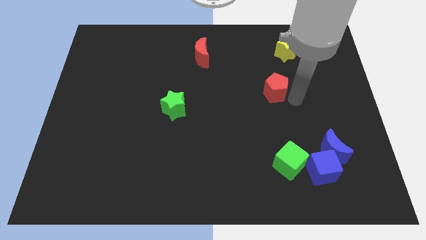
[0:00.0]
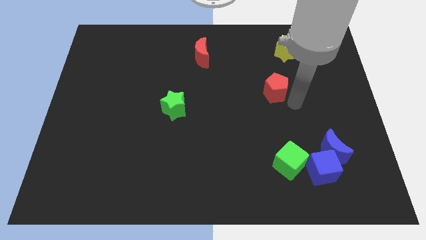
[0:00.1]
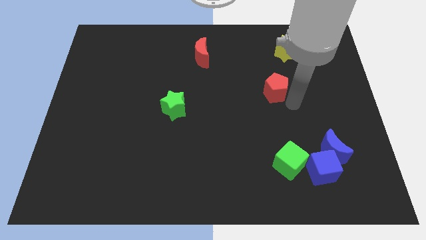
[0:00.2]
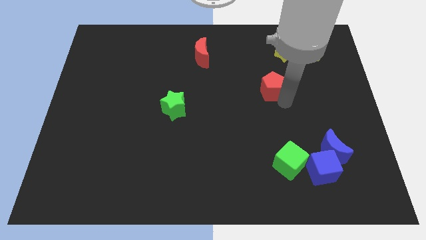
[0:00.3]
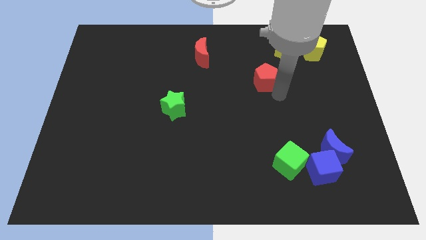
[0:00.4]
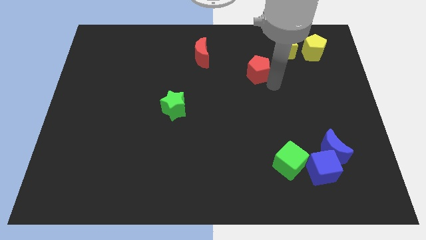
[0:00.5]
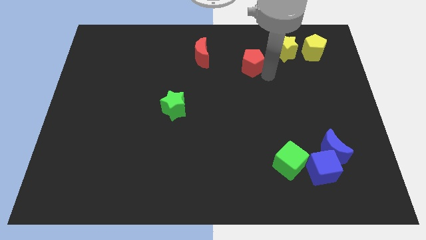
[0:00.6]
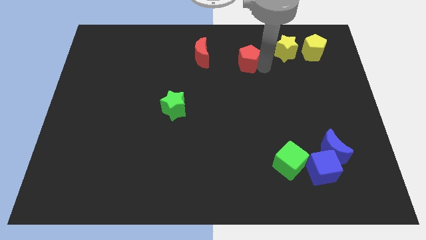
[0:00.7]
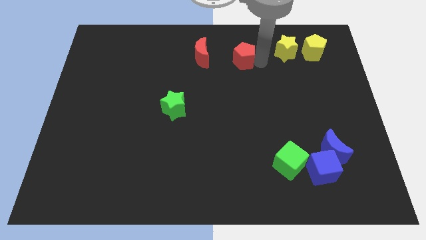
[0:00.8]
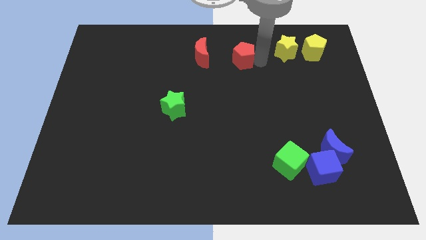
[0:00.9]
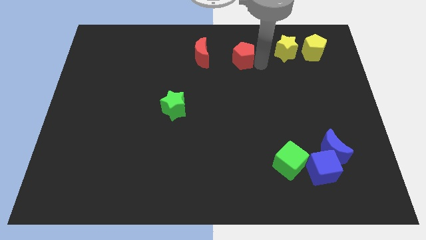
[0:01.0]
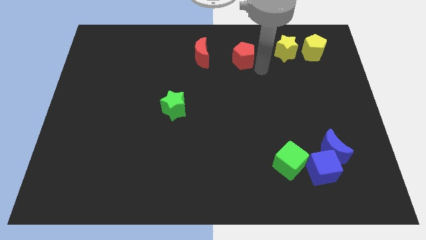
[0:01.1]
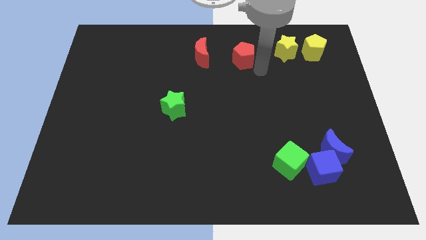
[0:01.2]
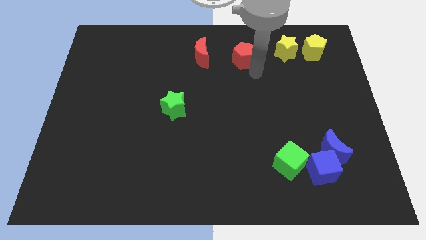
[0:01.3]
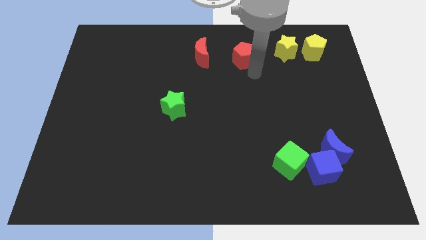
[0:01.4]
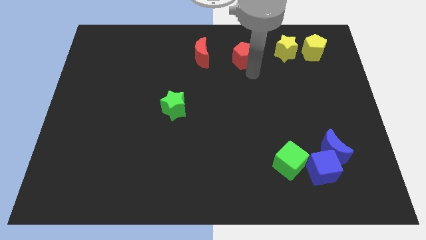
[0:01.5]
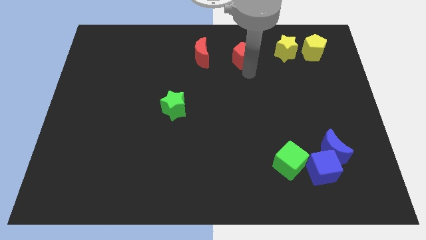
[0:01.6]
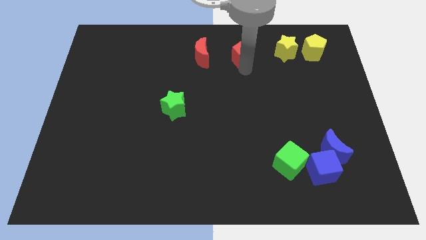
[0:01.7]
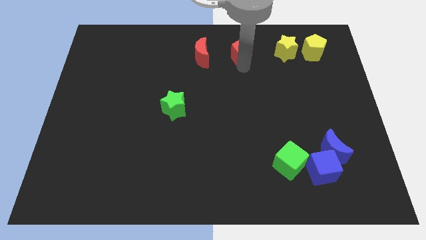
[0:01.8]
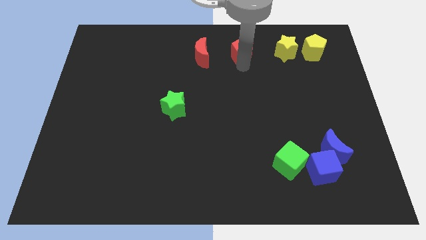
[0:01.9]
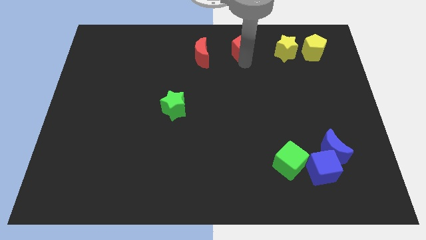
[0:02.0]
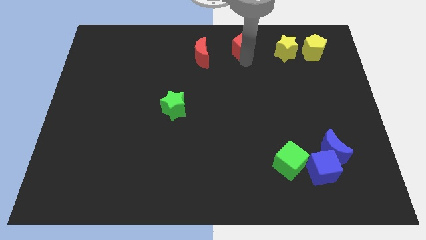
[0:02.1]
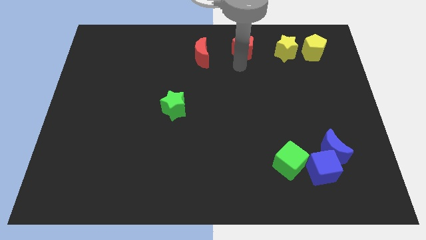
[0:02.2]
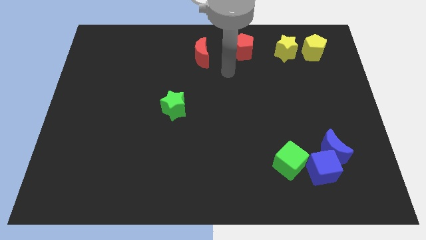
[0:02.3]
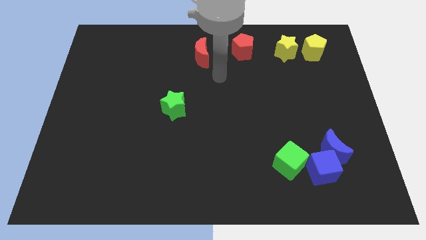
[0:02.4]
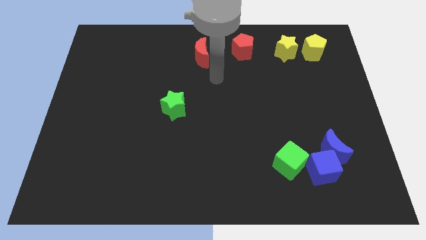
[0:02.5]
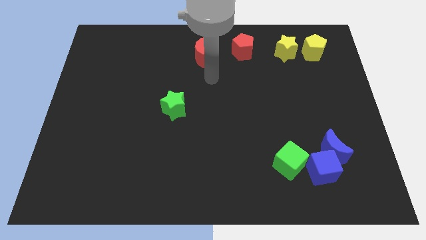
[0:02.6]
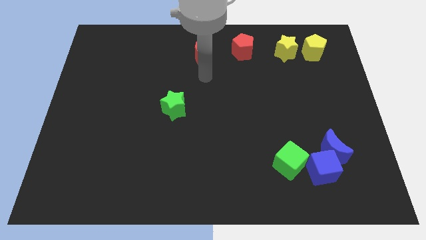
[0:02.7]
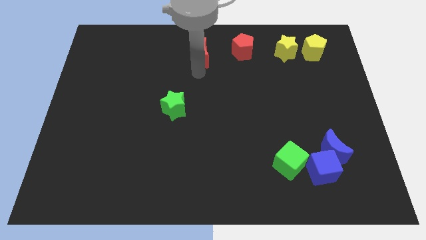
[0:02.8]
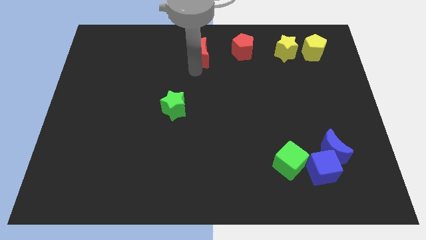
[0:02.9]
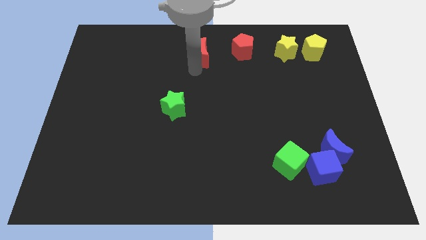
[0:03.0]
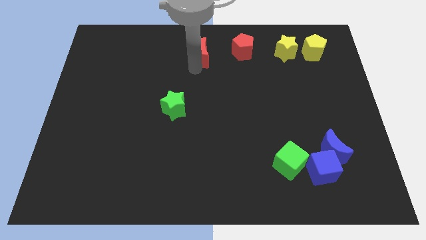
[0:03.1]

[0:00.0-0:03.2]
move red pentagon towards the top center of the board

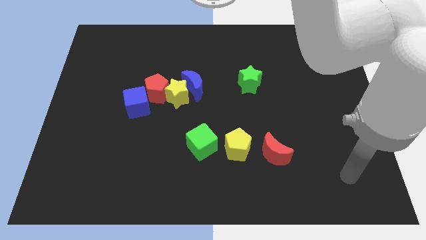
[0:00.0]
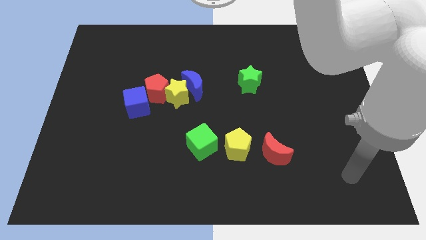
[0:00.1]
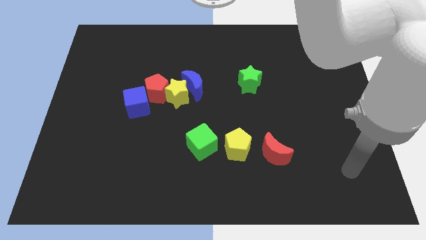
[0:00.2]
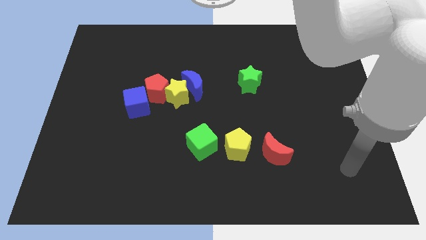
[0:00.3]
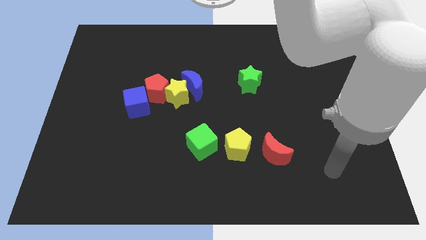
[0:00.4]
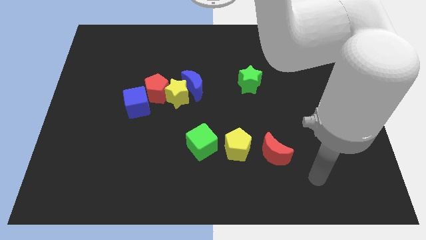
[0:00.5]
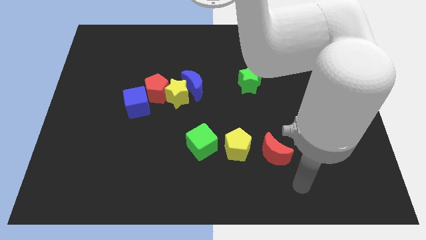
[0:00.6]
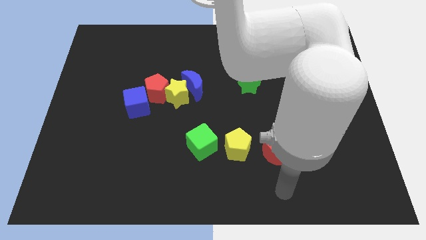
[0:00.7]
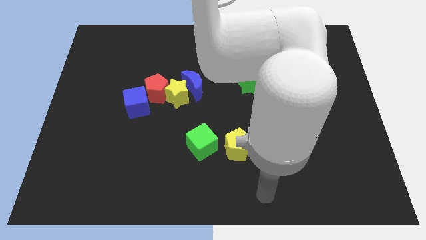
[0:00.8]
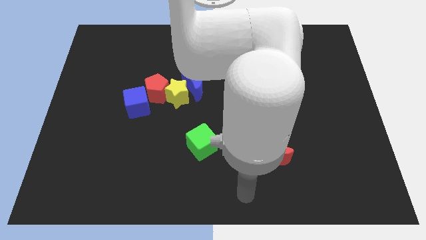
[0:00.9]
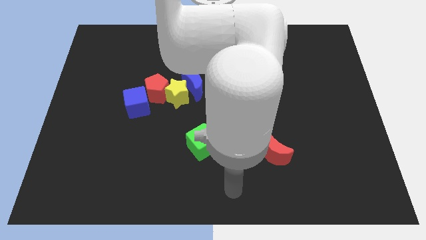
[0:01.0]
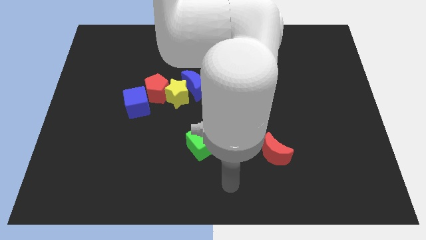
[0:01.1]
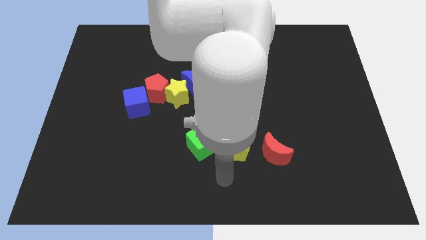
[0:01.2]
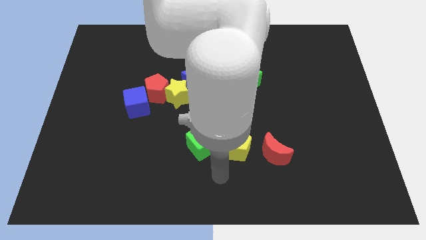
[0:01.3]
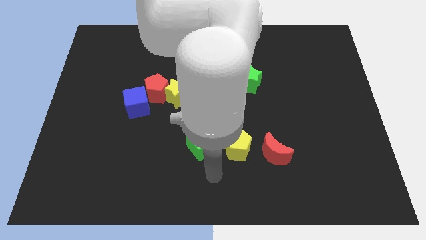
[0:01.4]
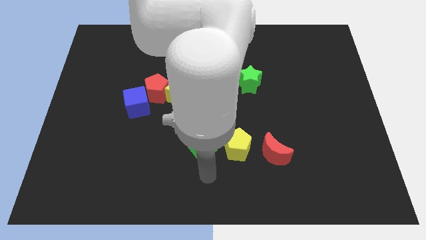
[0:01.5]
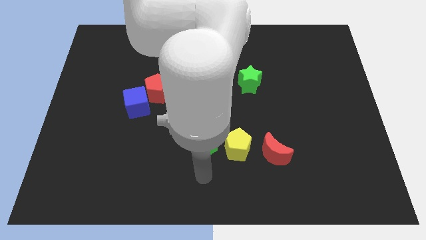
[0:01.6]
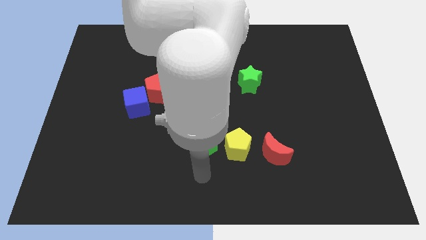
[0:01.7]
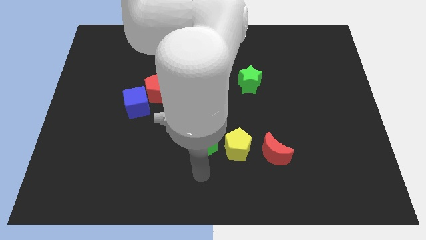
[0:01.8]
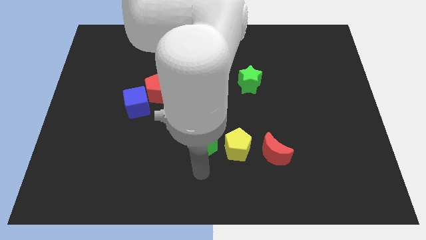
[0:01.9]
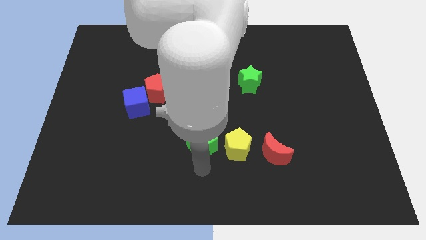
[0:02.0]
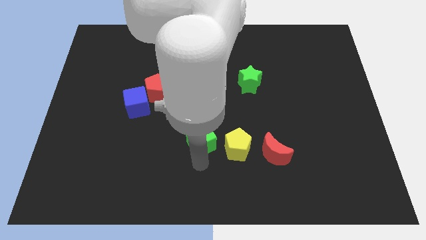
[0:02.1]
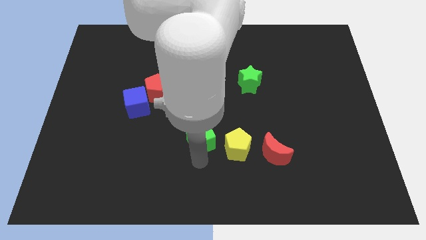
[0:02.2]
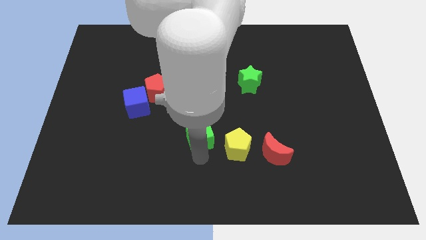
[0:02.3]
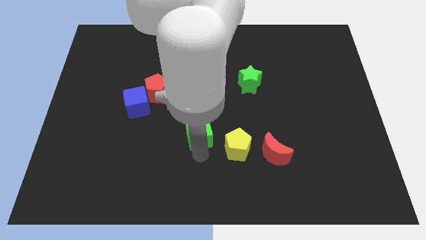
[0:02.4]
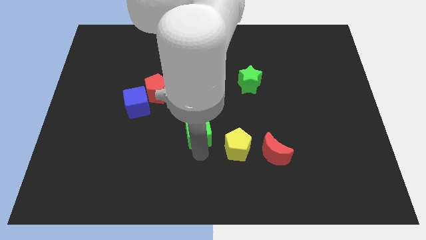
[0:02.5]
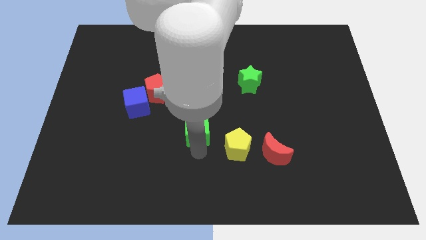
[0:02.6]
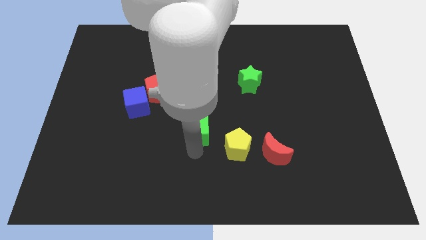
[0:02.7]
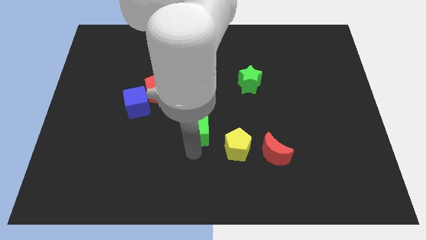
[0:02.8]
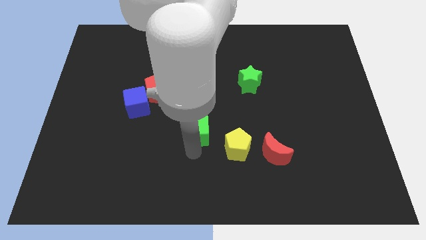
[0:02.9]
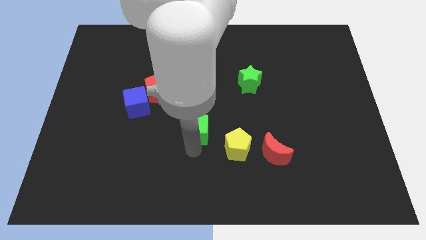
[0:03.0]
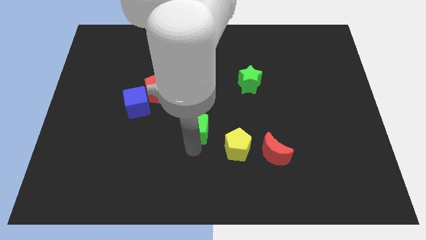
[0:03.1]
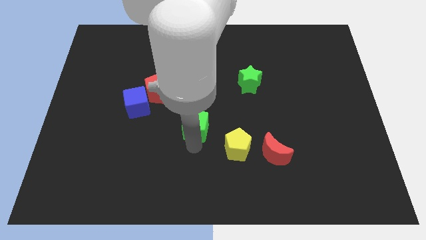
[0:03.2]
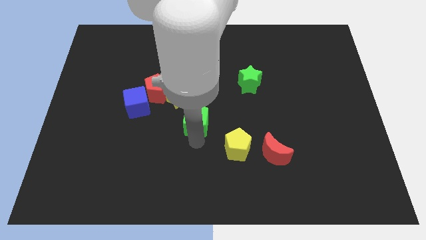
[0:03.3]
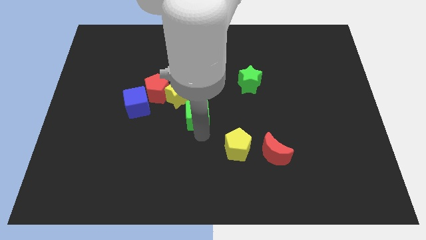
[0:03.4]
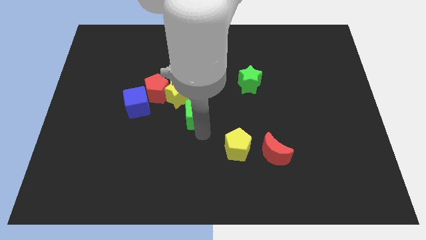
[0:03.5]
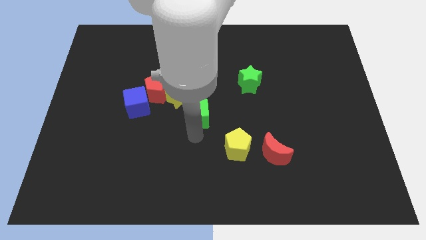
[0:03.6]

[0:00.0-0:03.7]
slightly move the green cube up

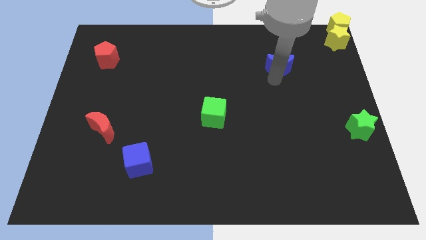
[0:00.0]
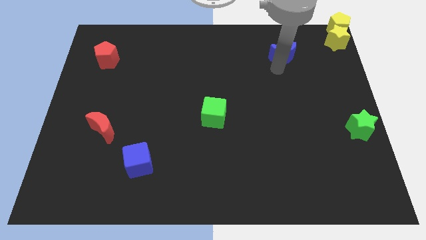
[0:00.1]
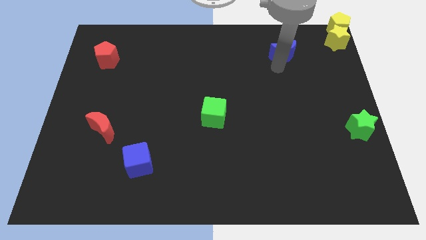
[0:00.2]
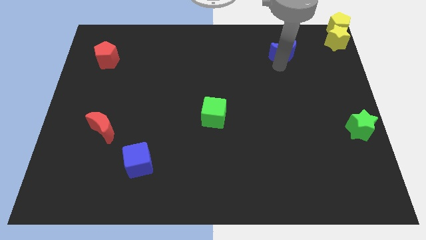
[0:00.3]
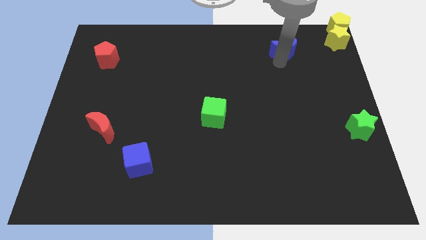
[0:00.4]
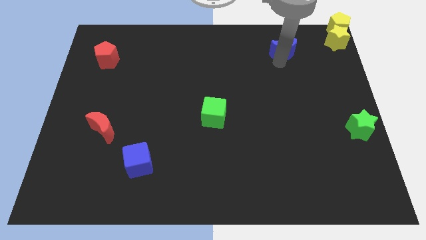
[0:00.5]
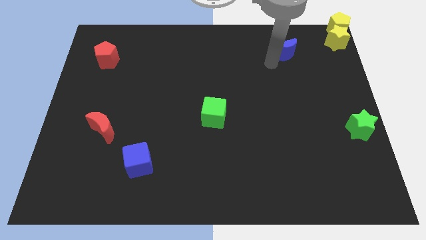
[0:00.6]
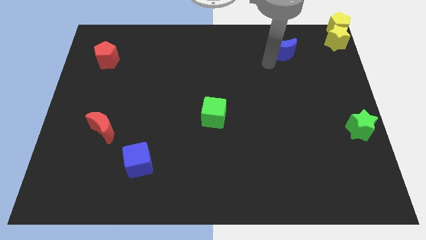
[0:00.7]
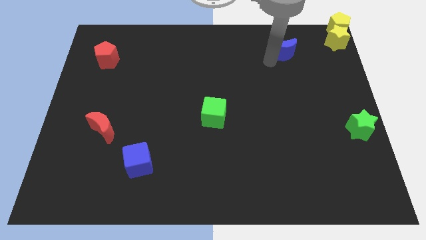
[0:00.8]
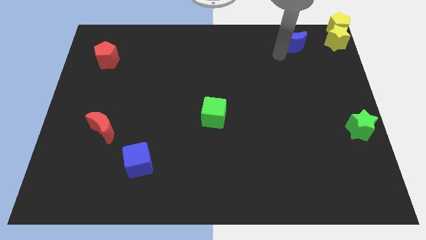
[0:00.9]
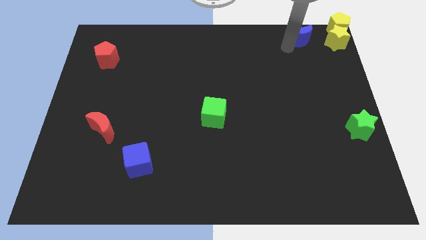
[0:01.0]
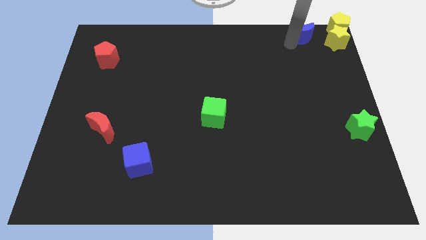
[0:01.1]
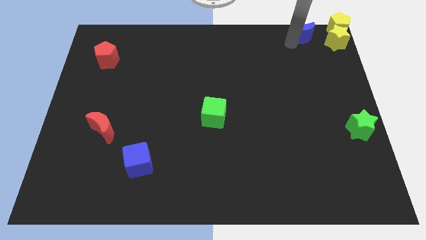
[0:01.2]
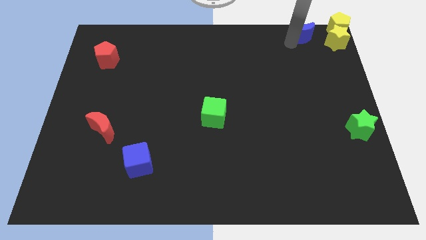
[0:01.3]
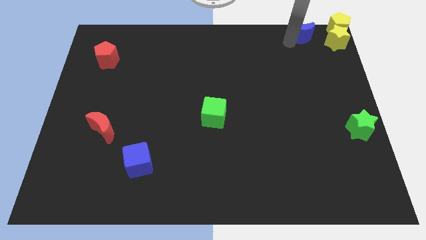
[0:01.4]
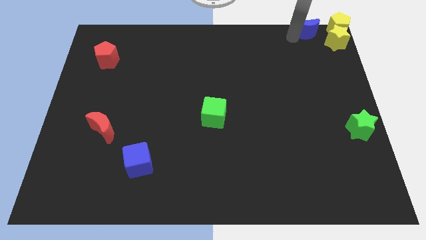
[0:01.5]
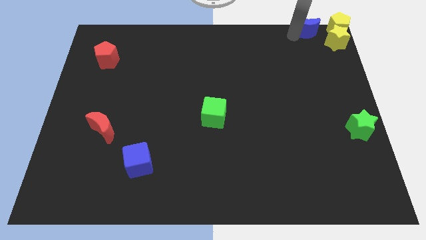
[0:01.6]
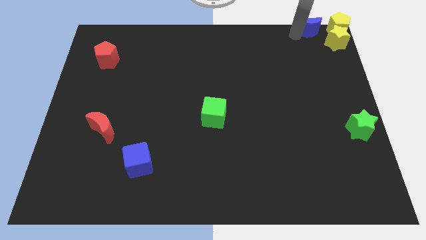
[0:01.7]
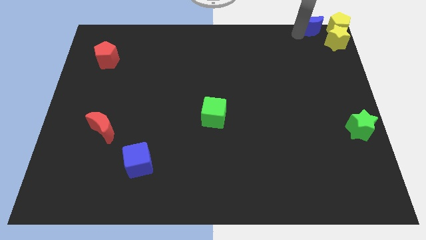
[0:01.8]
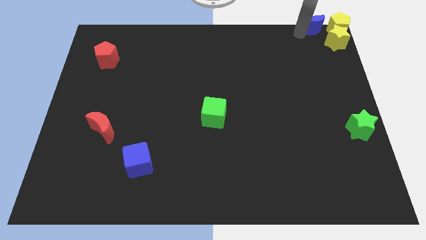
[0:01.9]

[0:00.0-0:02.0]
place the blue crescent left of yellow pentagon
